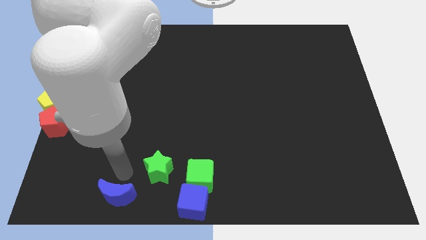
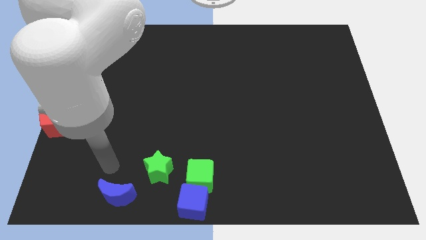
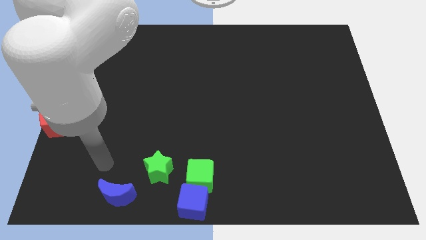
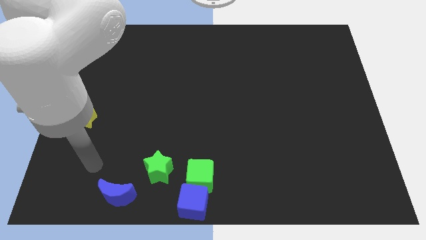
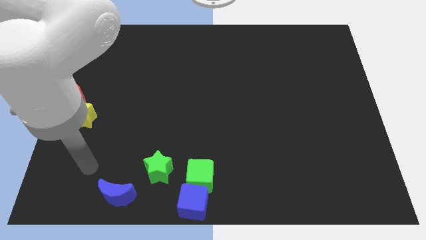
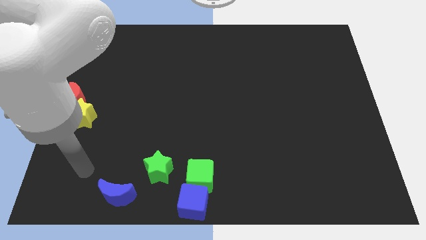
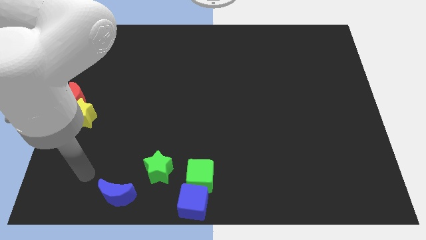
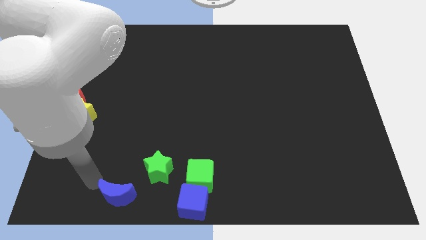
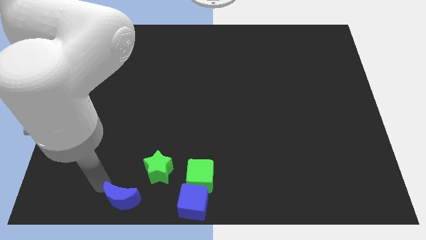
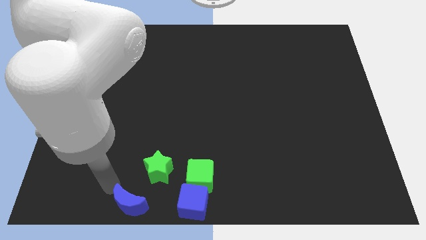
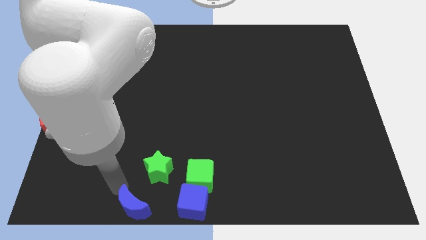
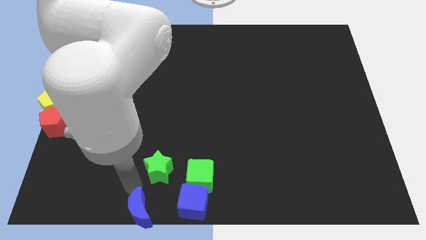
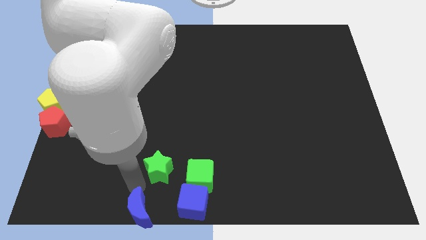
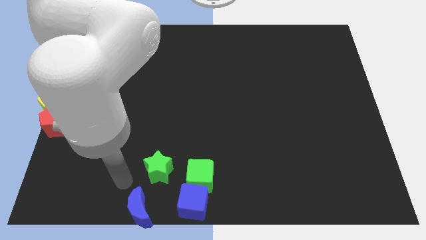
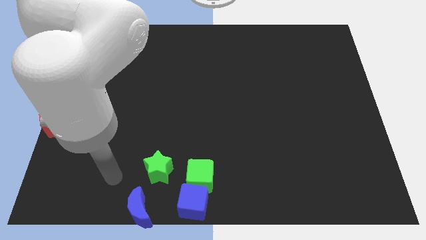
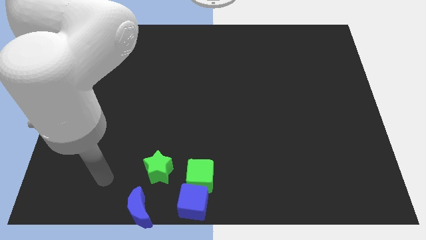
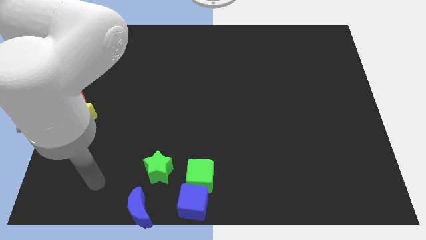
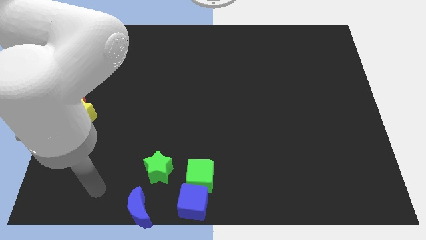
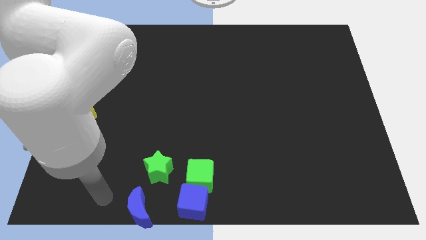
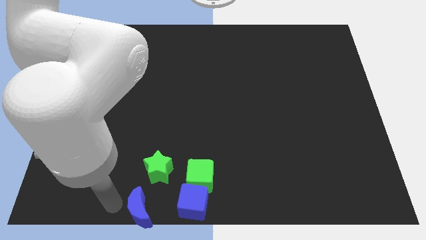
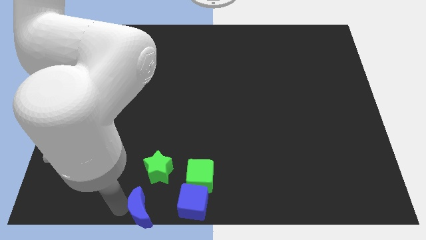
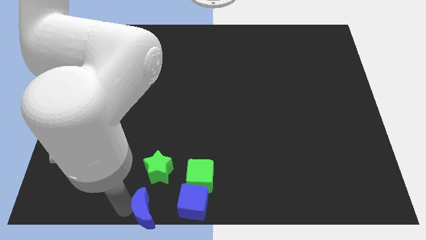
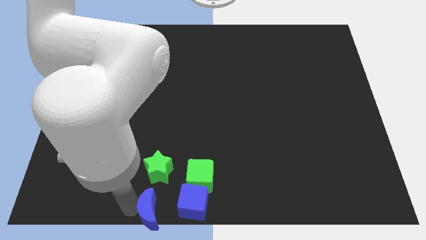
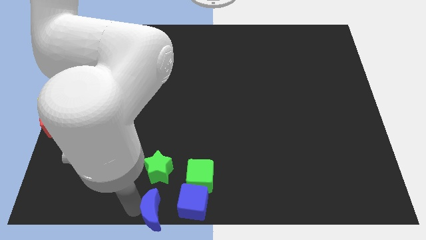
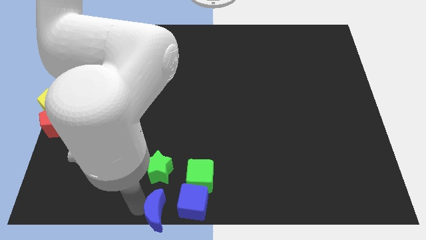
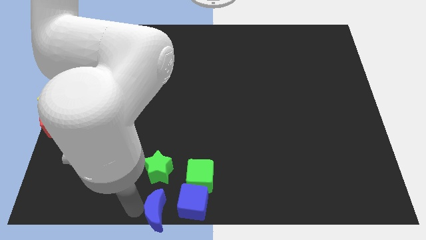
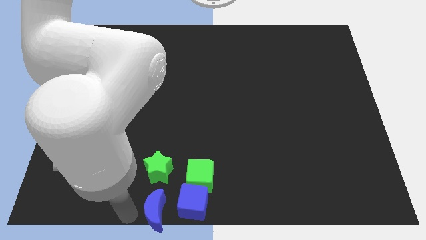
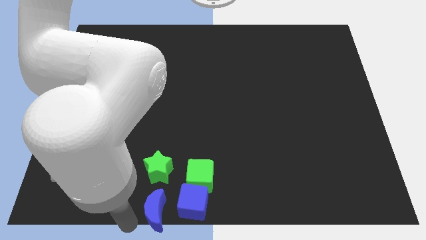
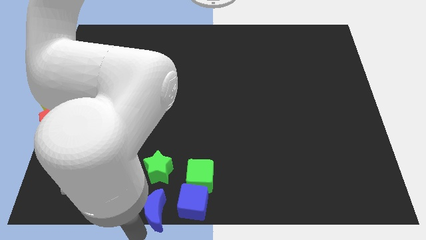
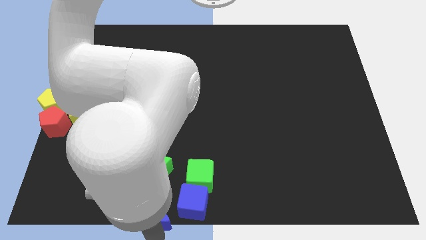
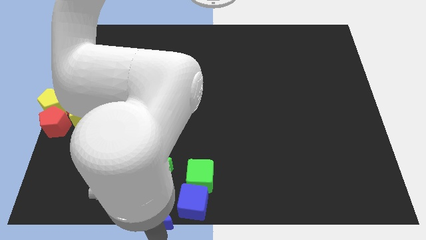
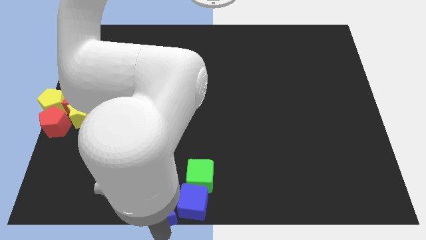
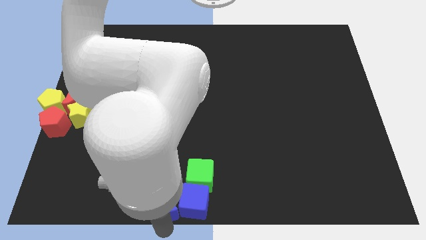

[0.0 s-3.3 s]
move the blue crescent into the left side of the blue cube

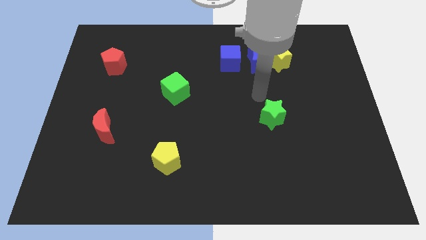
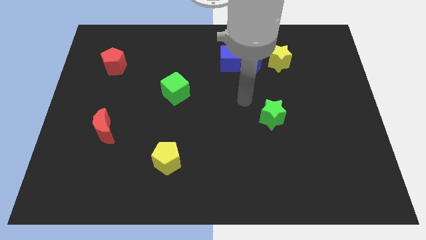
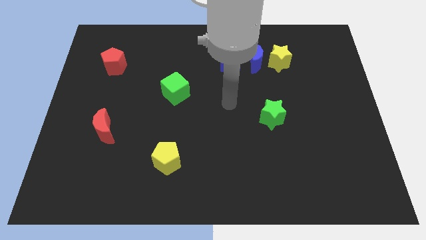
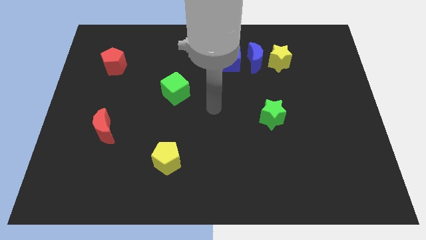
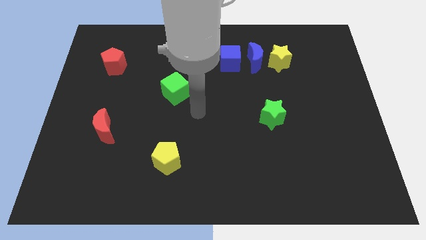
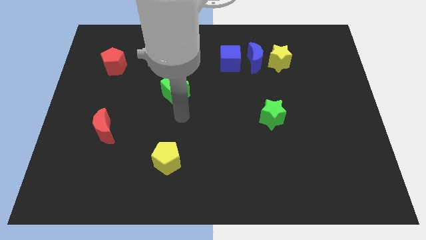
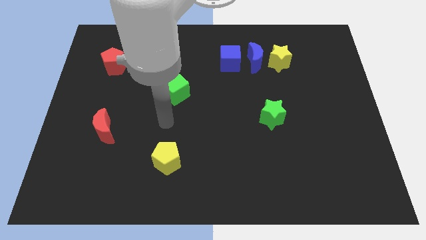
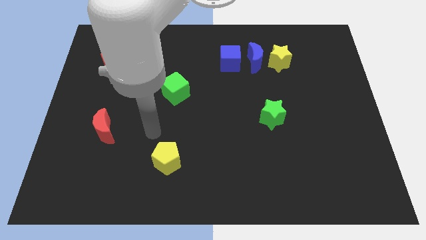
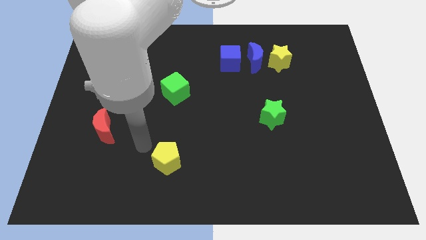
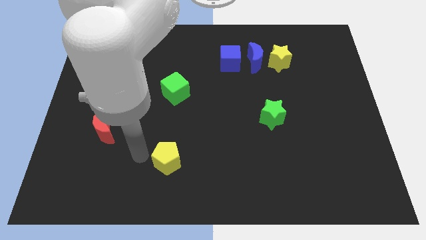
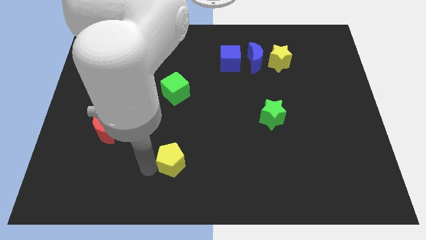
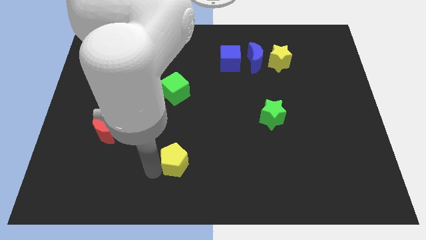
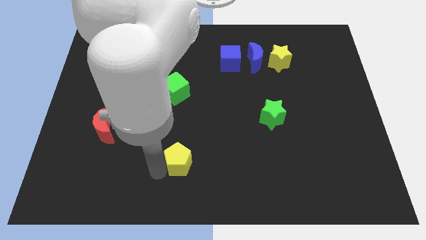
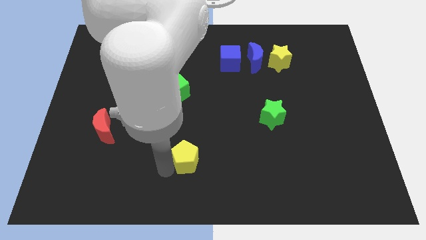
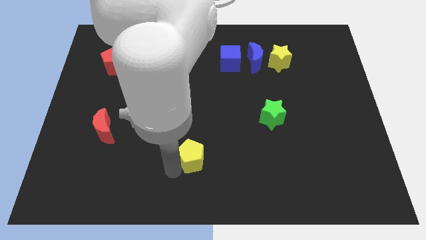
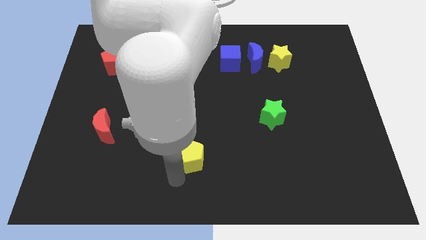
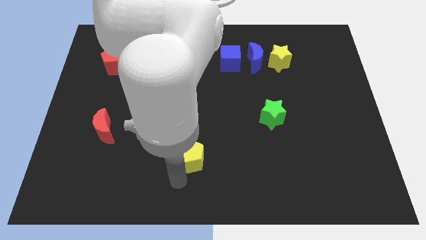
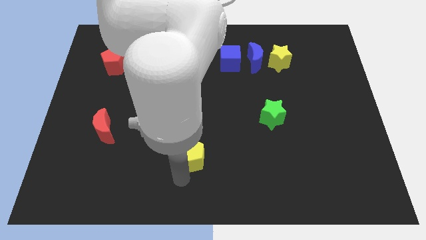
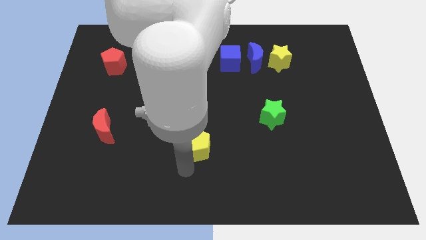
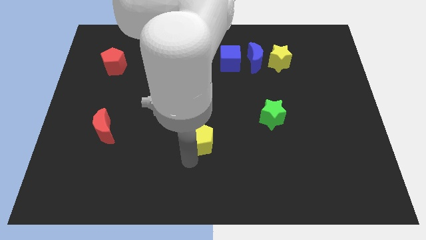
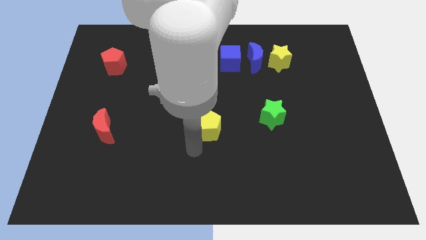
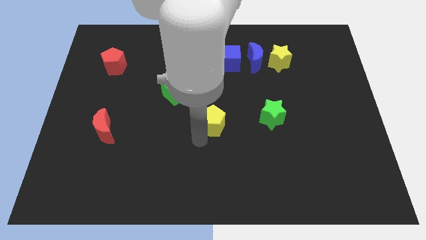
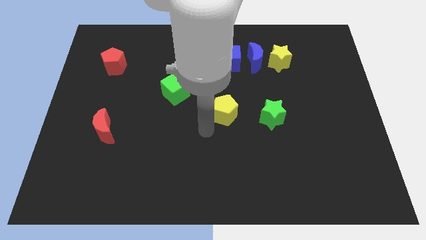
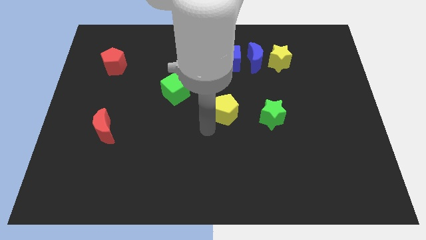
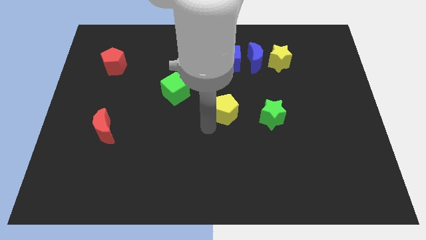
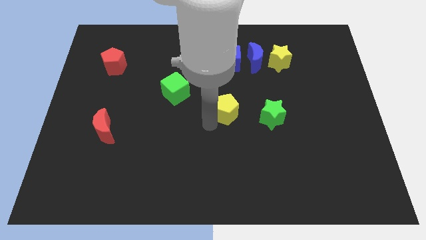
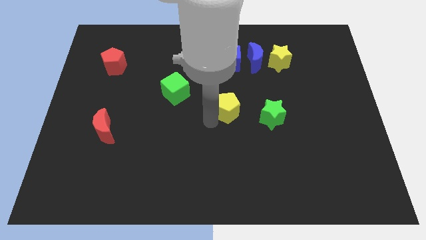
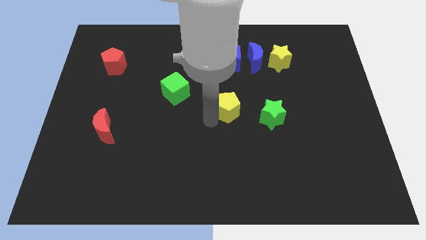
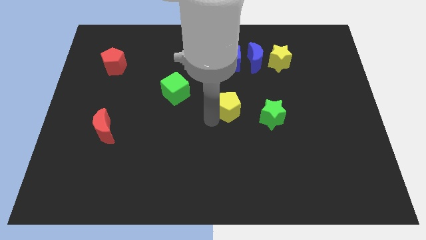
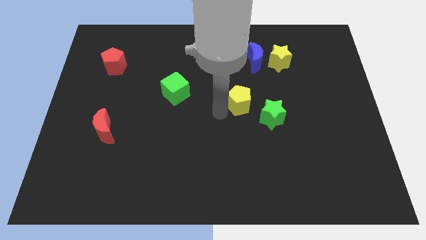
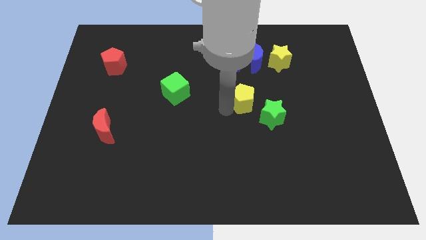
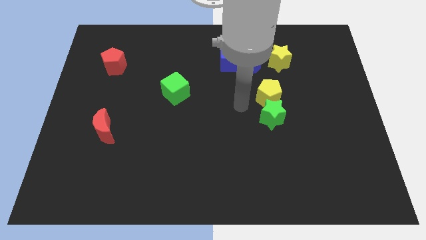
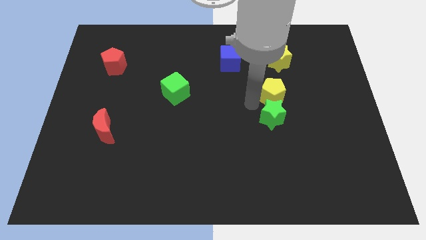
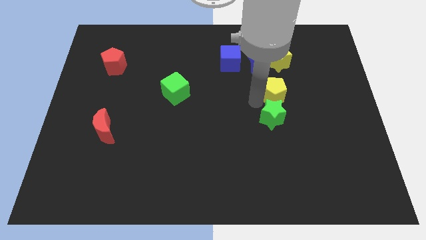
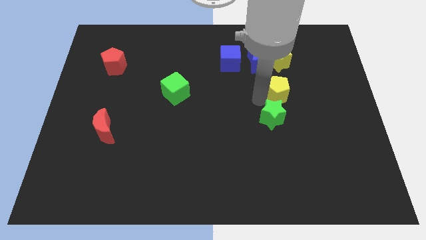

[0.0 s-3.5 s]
place the yellow pentagon in between green star and yellow star

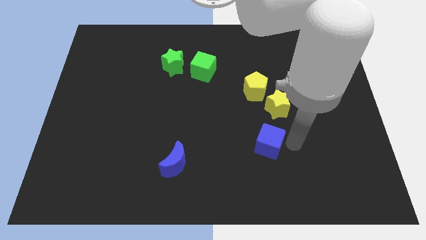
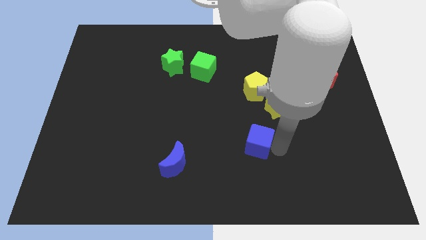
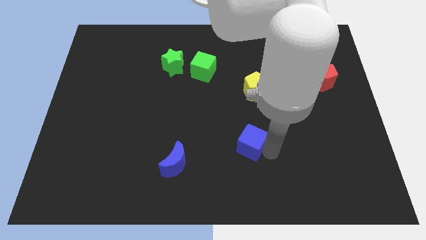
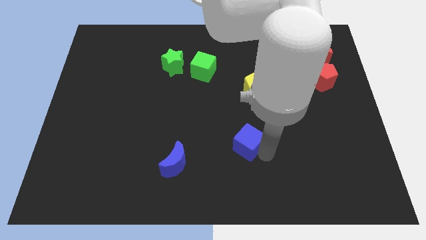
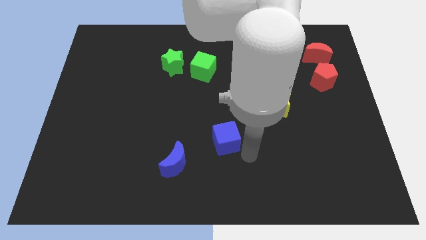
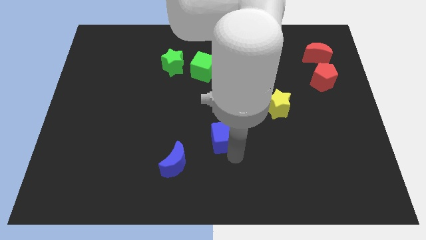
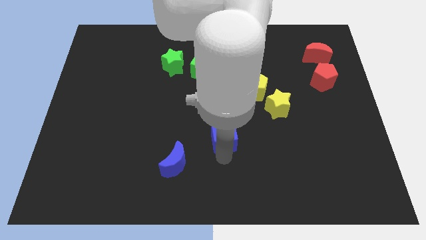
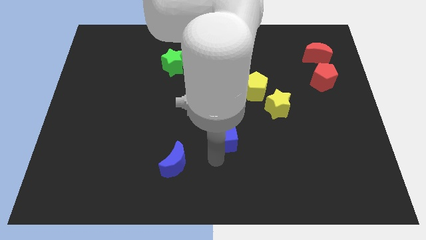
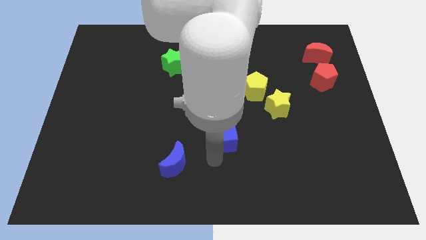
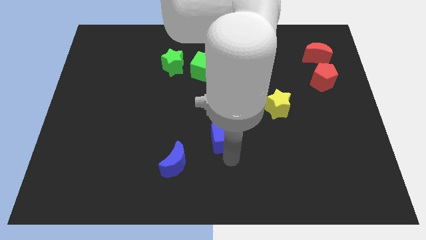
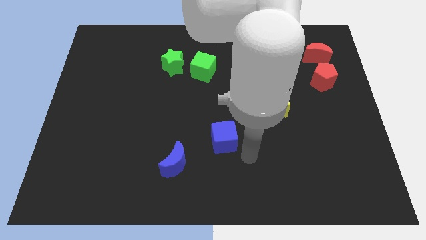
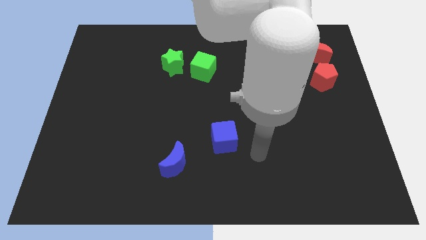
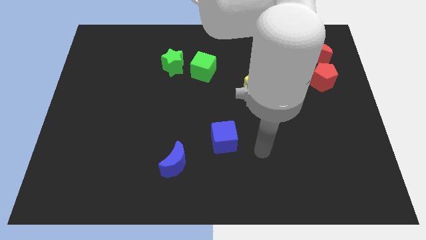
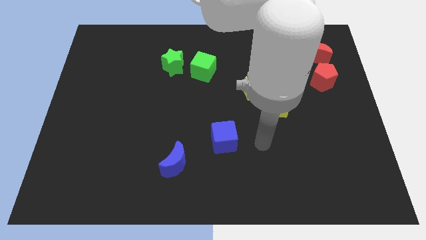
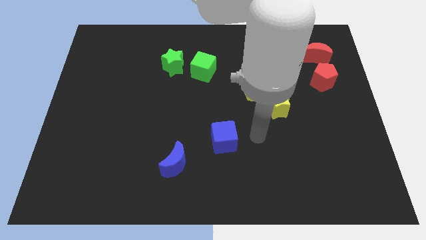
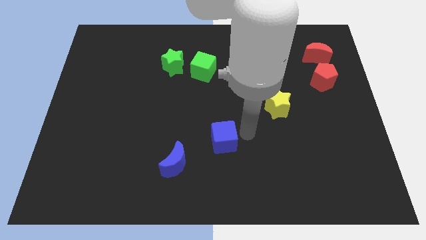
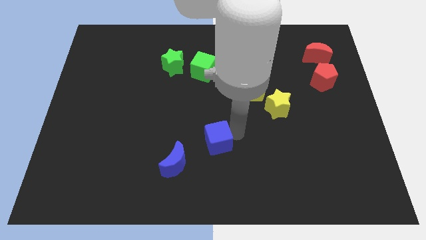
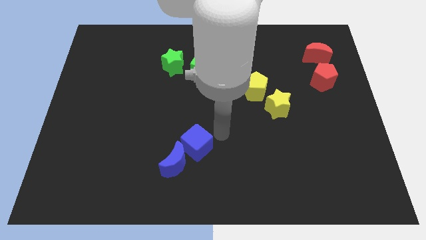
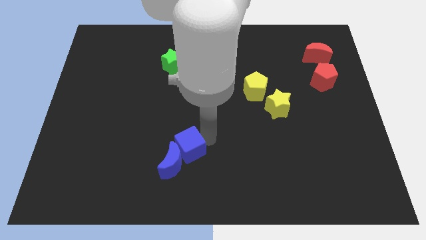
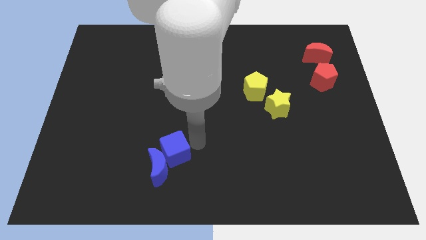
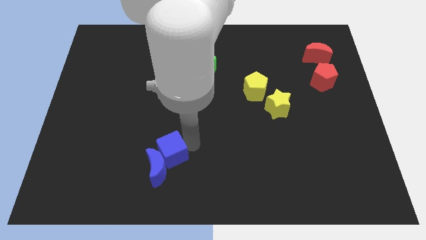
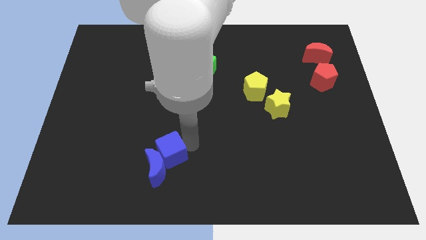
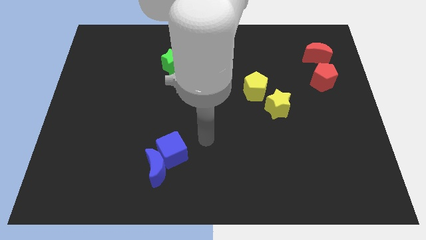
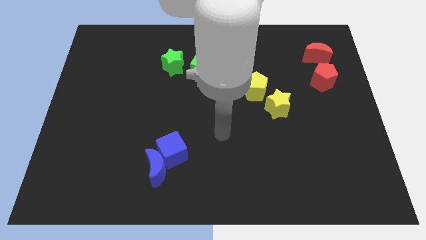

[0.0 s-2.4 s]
move the blue cube into the blue crescent
